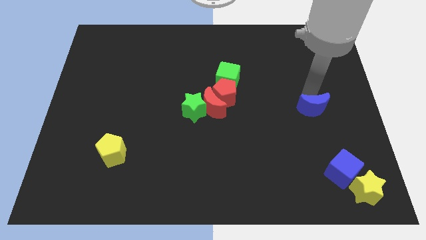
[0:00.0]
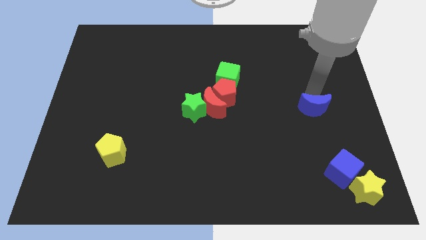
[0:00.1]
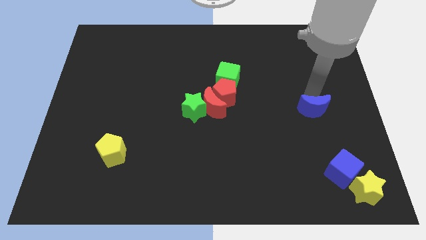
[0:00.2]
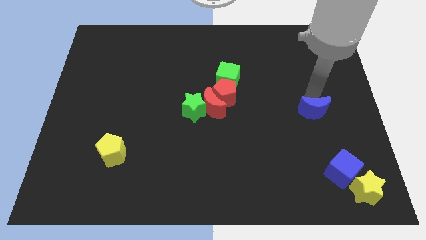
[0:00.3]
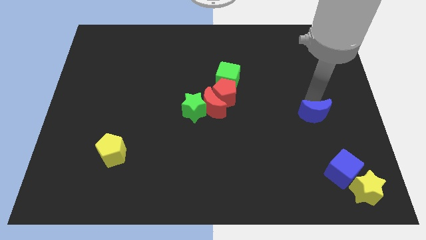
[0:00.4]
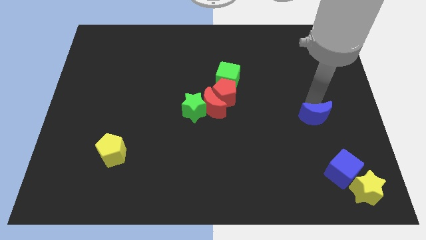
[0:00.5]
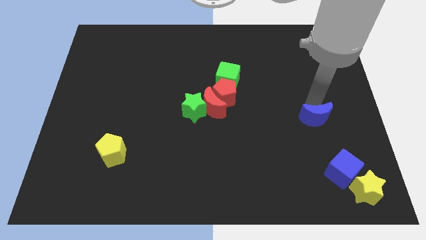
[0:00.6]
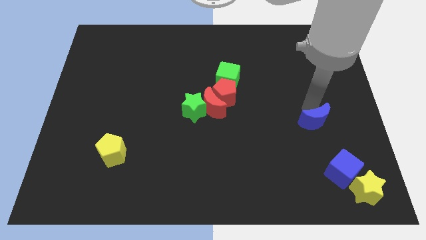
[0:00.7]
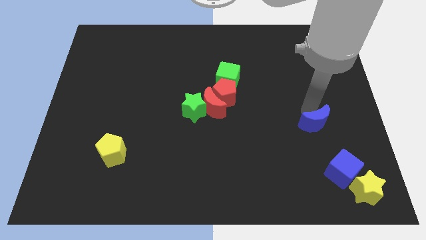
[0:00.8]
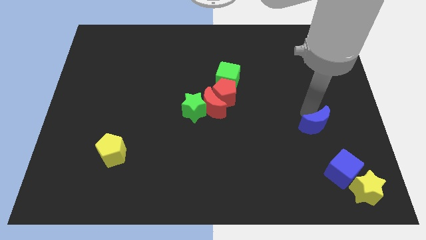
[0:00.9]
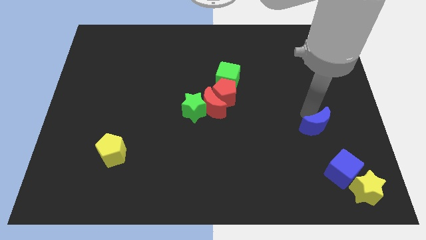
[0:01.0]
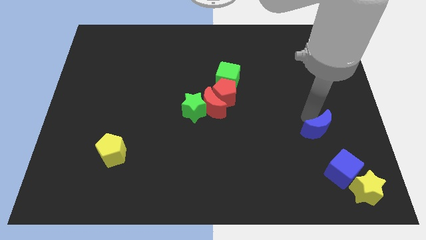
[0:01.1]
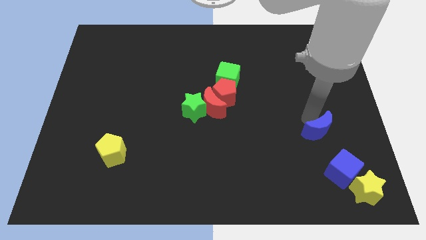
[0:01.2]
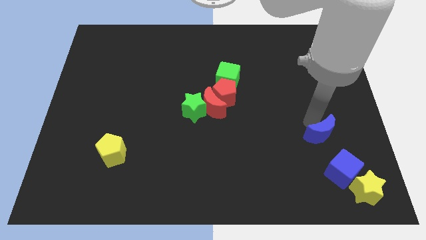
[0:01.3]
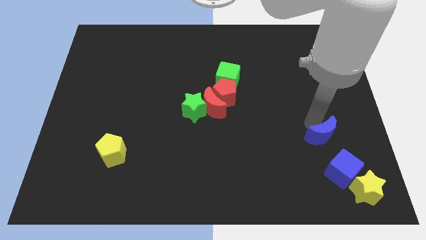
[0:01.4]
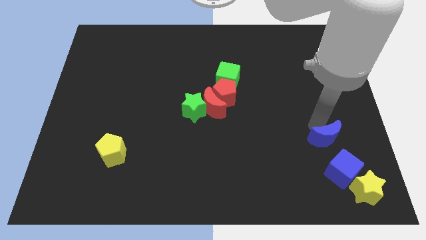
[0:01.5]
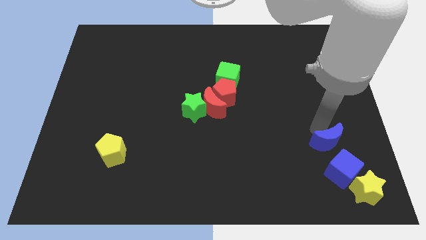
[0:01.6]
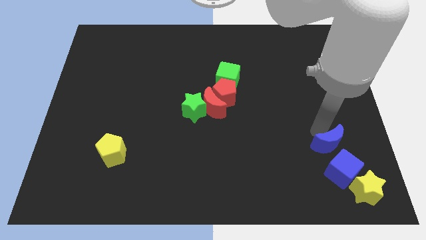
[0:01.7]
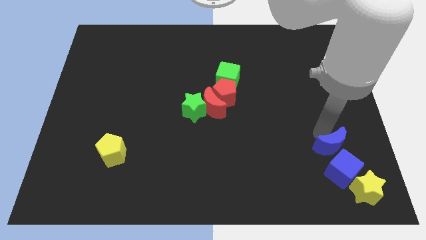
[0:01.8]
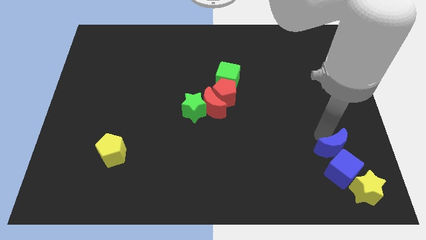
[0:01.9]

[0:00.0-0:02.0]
place blue crescent above blue cube

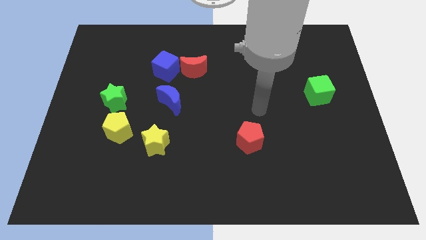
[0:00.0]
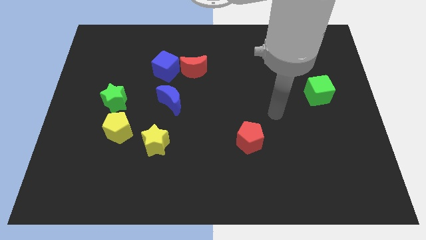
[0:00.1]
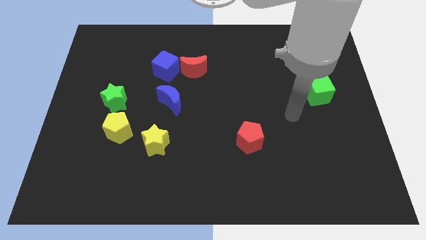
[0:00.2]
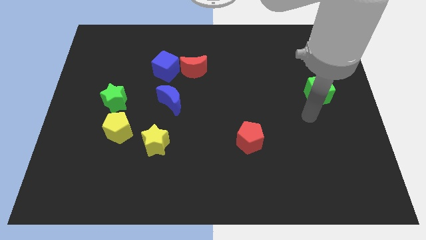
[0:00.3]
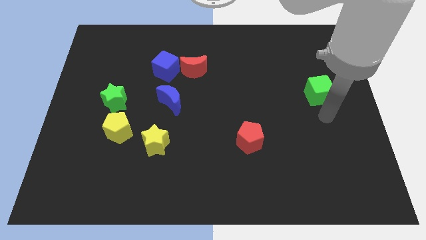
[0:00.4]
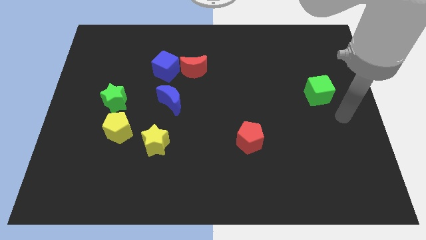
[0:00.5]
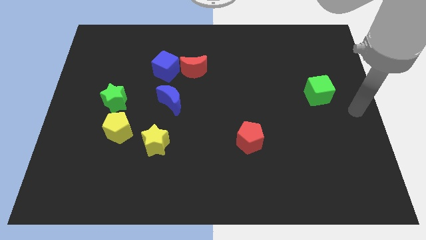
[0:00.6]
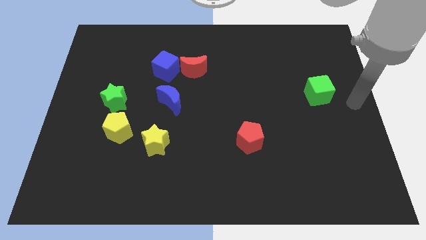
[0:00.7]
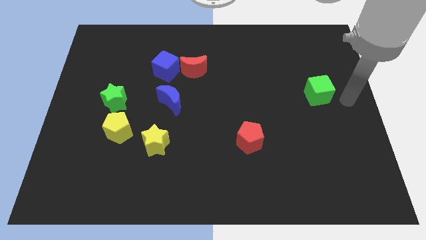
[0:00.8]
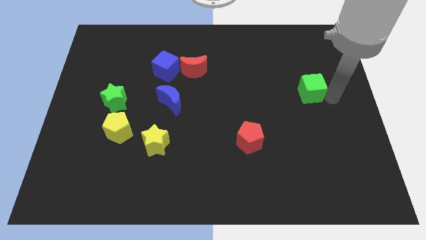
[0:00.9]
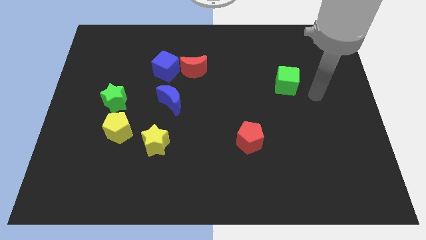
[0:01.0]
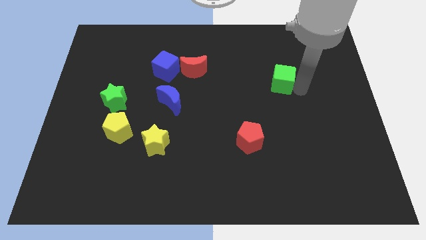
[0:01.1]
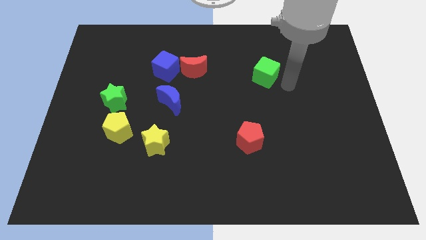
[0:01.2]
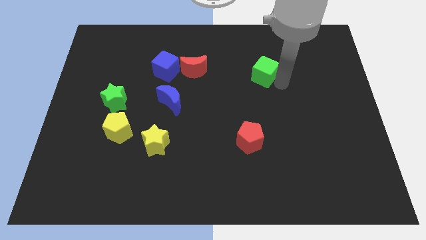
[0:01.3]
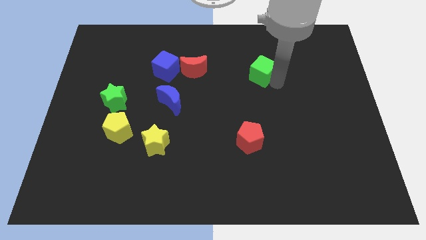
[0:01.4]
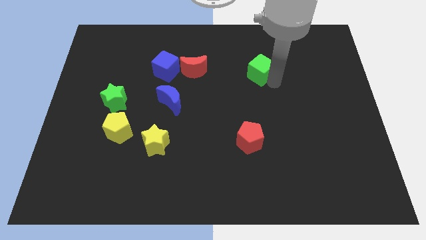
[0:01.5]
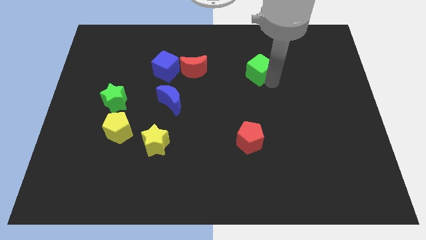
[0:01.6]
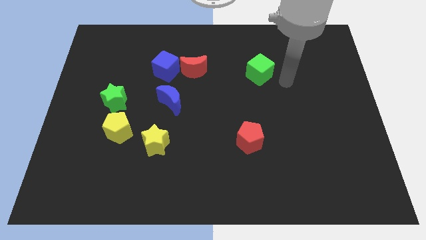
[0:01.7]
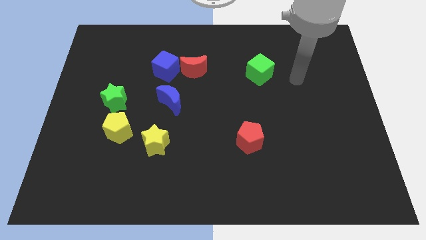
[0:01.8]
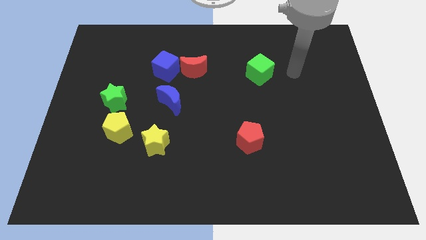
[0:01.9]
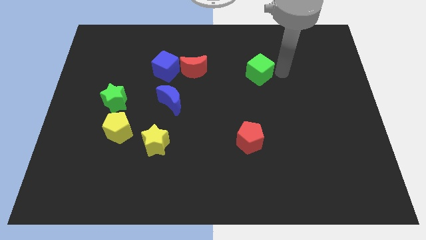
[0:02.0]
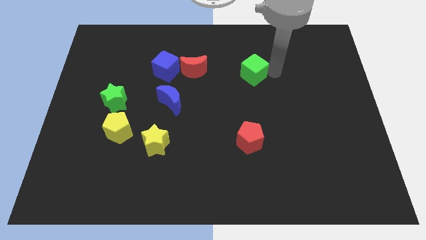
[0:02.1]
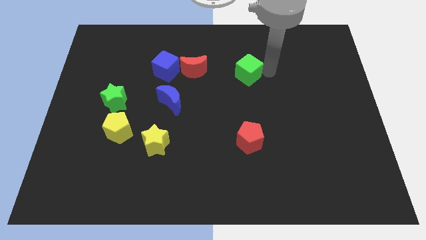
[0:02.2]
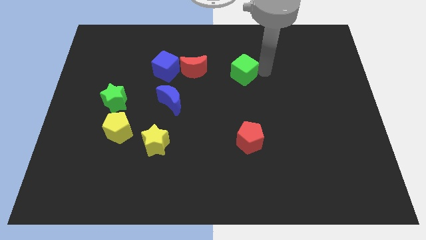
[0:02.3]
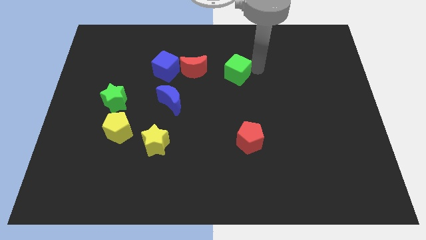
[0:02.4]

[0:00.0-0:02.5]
place the green cube above the red pentagon

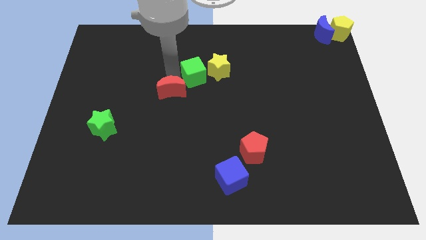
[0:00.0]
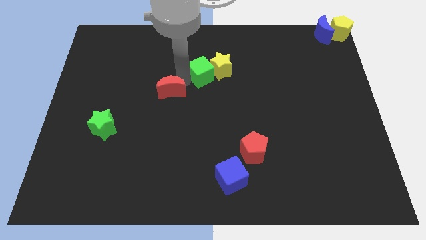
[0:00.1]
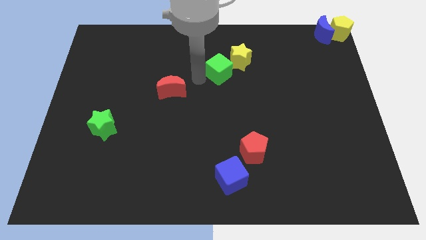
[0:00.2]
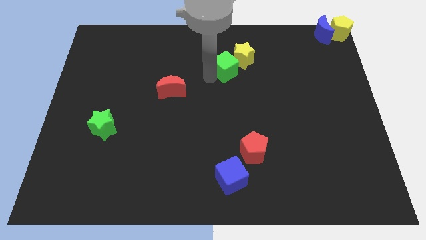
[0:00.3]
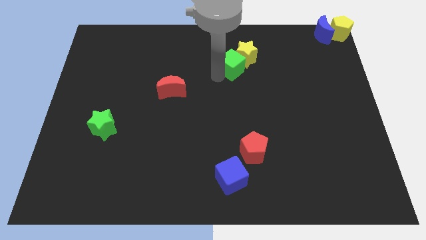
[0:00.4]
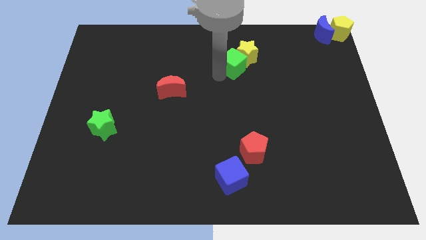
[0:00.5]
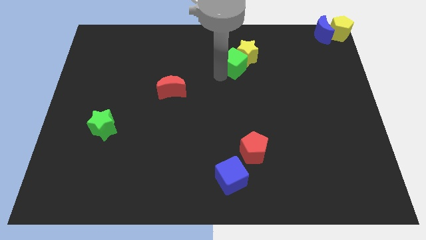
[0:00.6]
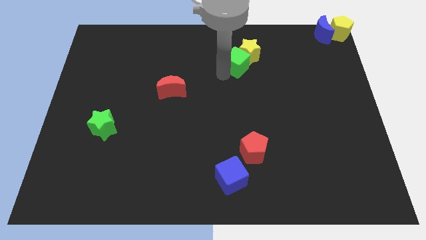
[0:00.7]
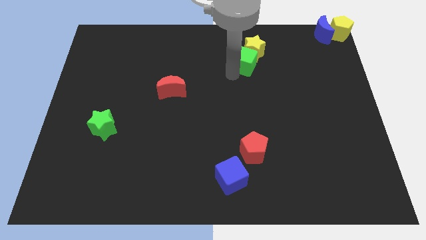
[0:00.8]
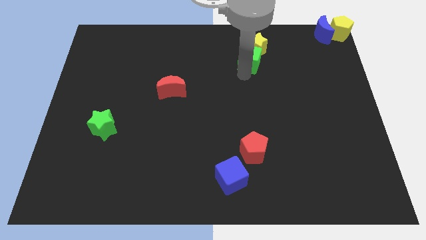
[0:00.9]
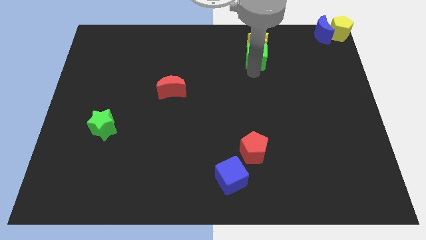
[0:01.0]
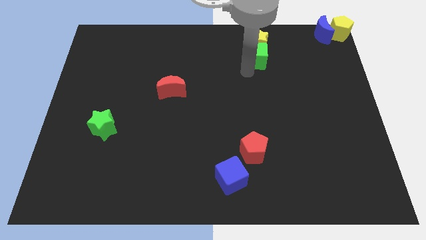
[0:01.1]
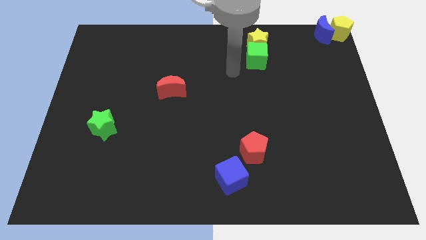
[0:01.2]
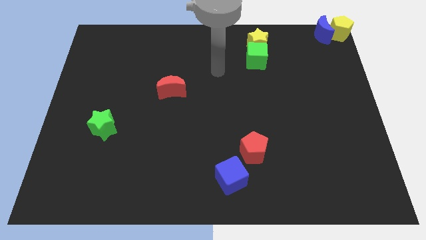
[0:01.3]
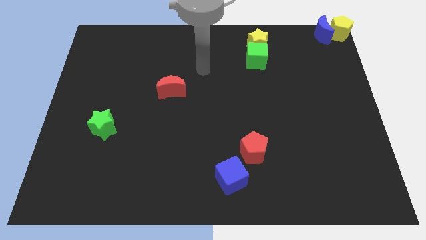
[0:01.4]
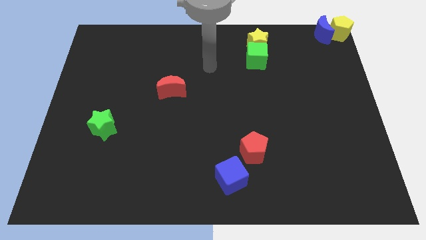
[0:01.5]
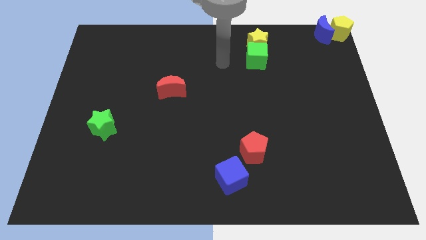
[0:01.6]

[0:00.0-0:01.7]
separate green cube from red crescent

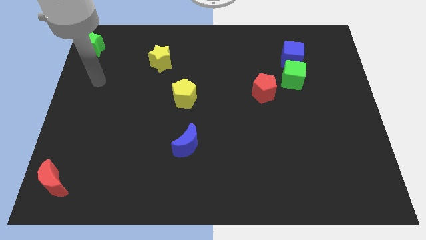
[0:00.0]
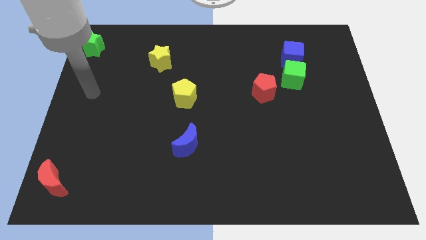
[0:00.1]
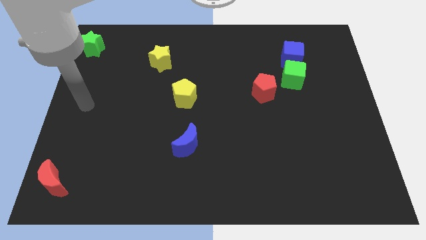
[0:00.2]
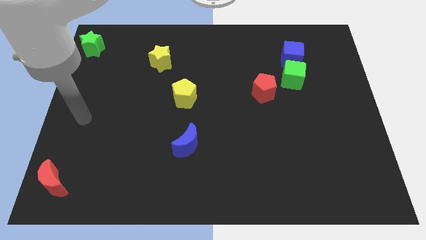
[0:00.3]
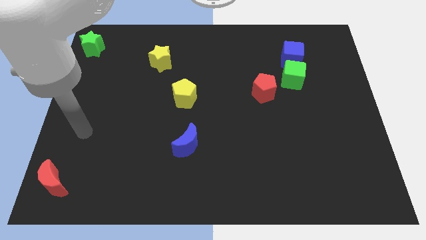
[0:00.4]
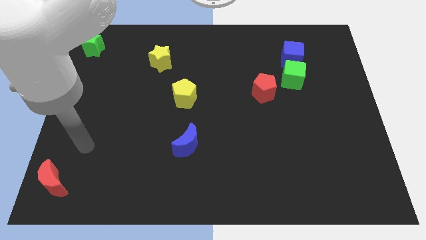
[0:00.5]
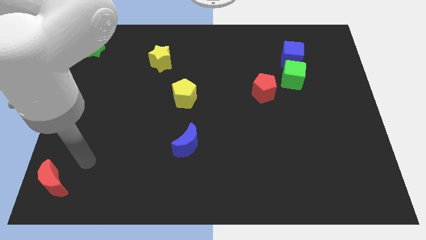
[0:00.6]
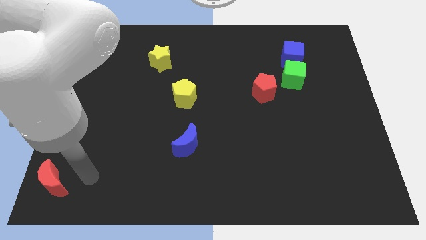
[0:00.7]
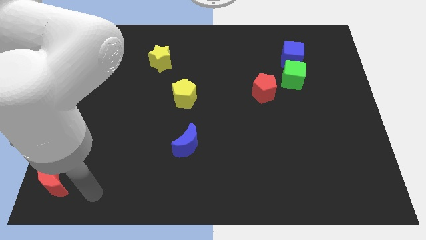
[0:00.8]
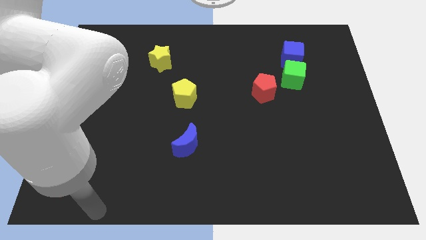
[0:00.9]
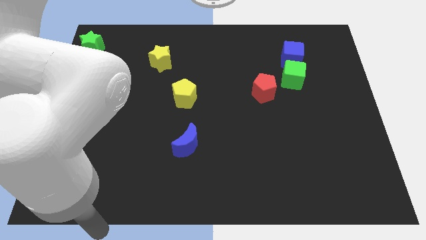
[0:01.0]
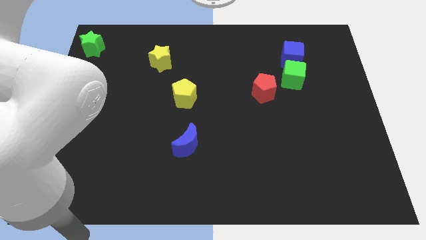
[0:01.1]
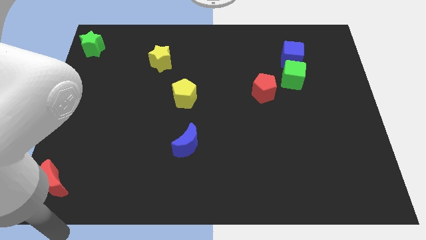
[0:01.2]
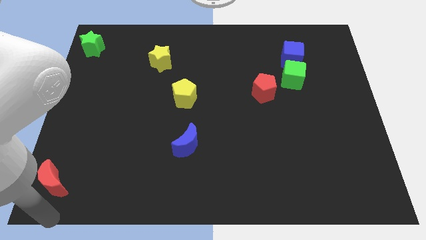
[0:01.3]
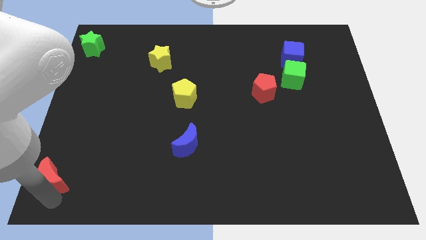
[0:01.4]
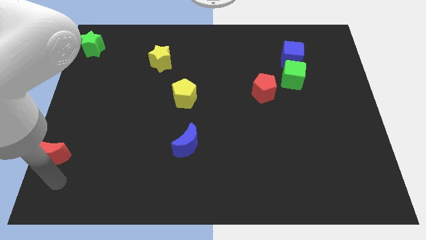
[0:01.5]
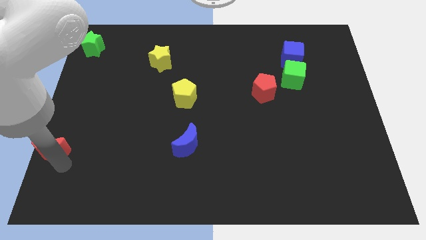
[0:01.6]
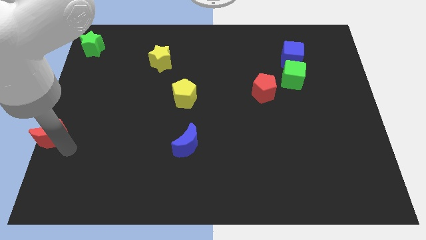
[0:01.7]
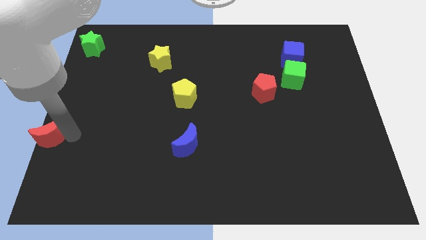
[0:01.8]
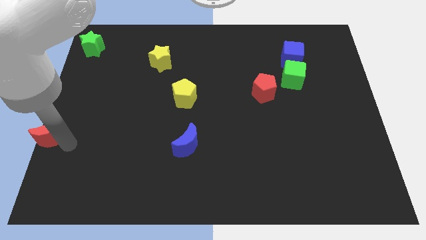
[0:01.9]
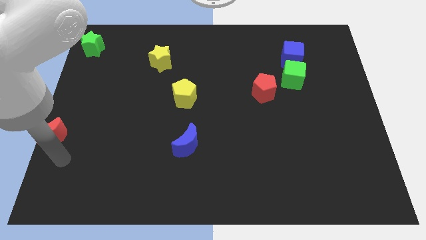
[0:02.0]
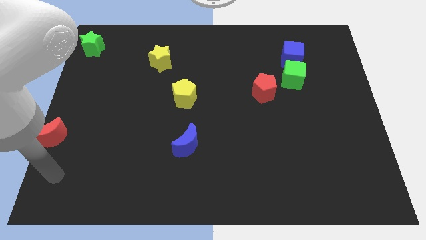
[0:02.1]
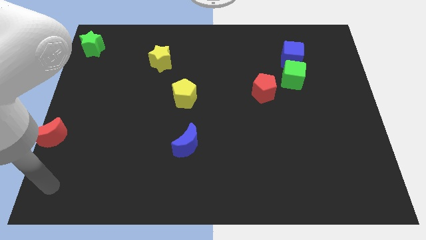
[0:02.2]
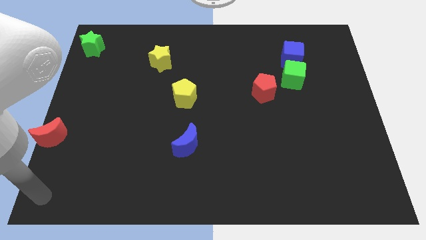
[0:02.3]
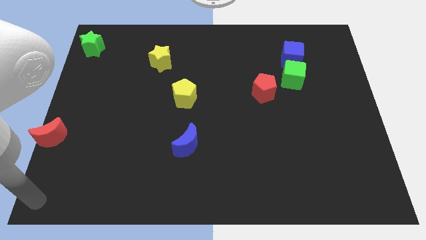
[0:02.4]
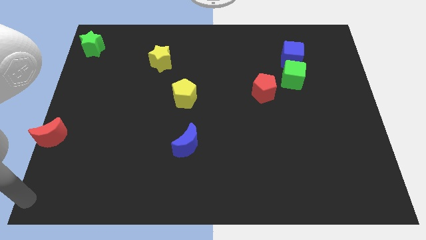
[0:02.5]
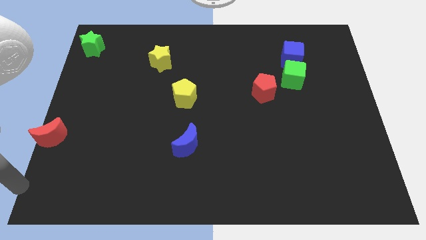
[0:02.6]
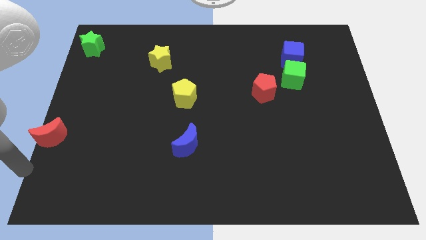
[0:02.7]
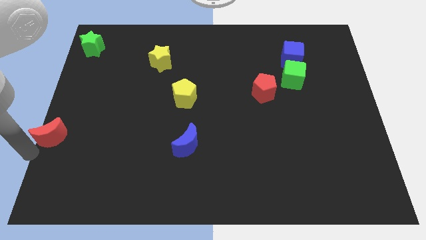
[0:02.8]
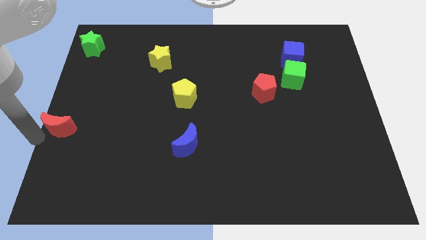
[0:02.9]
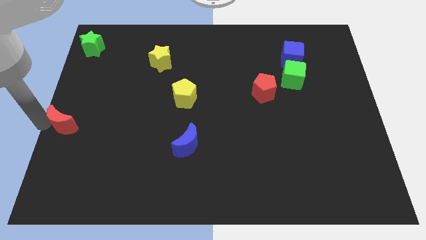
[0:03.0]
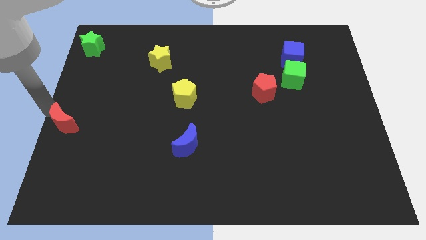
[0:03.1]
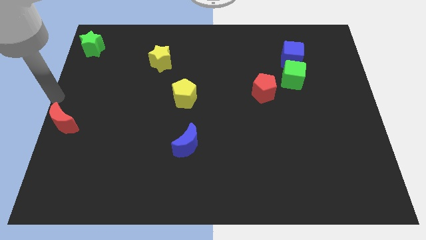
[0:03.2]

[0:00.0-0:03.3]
drag the red moon diagonally top left to the blue moon
